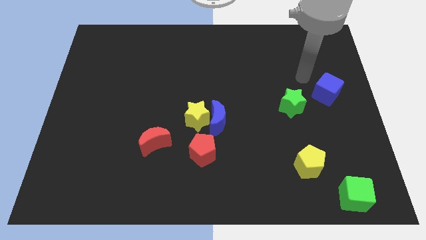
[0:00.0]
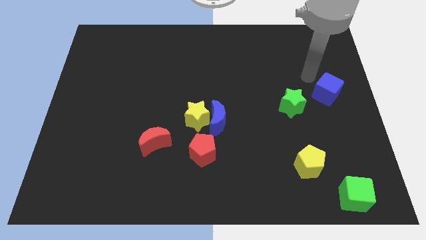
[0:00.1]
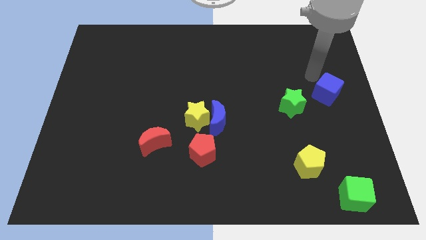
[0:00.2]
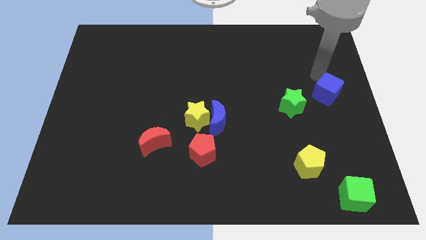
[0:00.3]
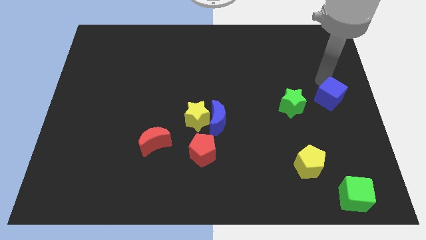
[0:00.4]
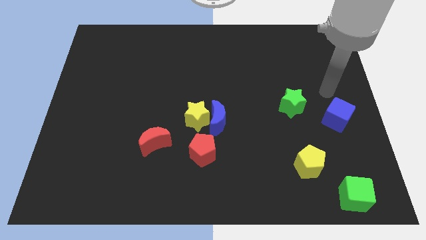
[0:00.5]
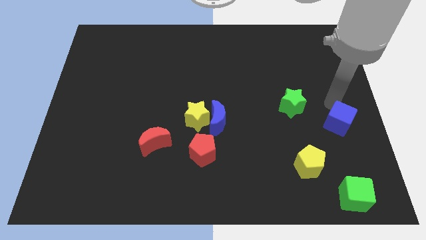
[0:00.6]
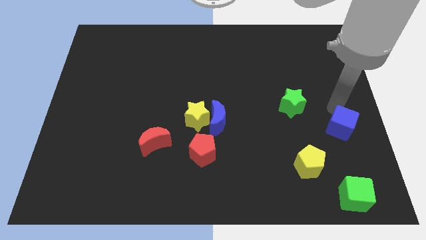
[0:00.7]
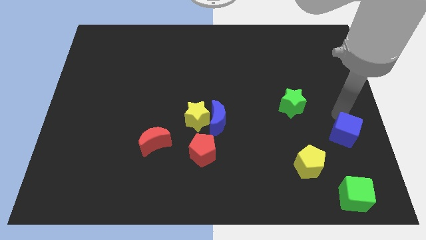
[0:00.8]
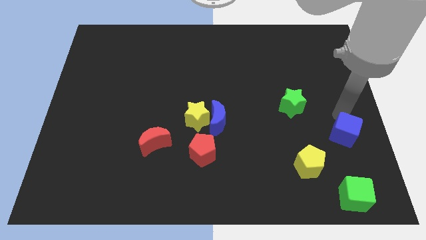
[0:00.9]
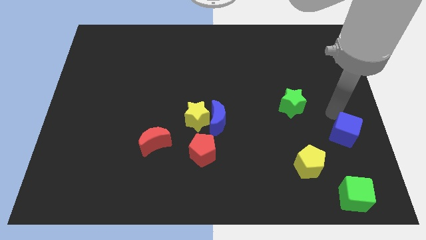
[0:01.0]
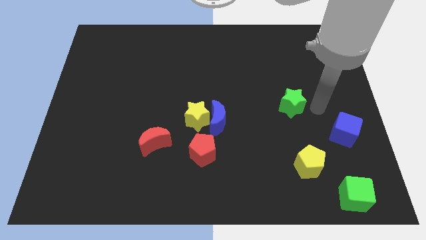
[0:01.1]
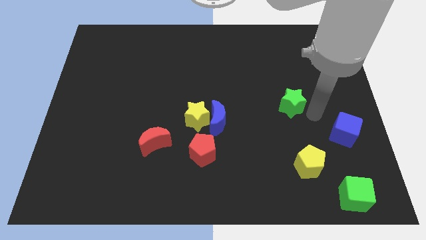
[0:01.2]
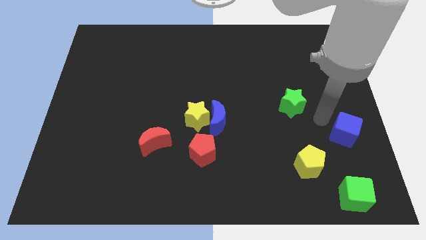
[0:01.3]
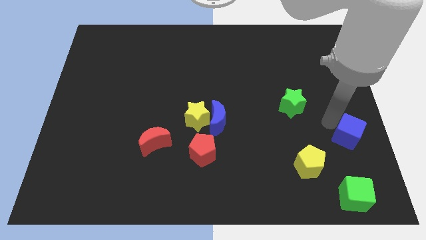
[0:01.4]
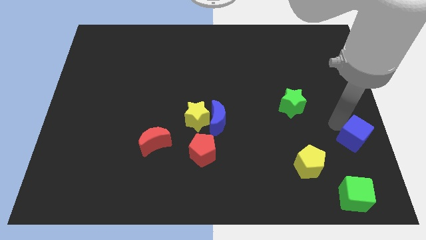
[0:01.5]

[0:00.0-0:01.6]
push the blue cube slightly down

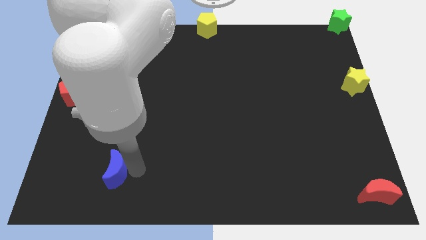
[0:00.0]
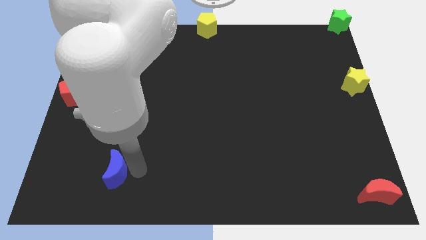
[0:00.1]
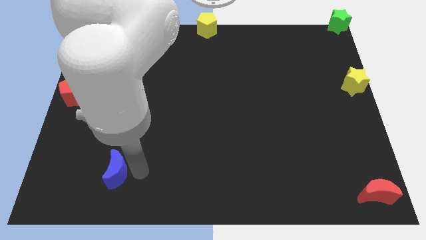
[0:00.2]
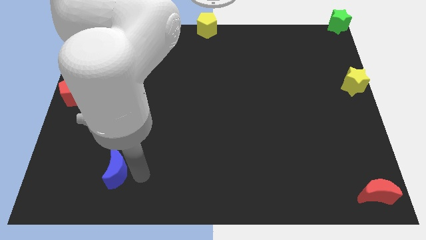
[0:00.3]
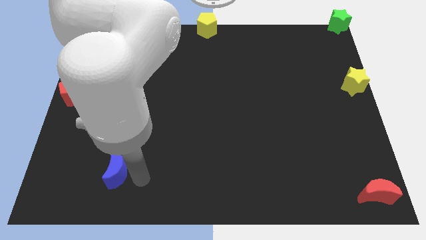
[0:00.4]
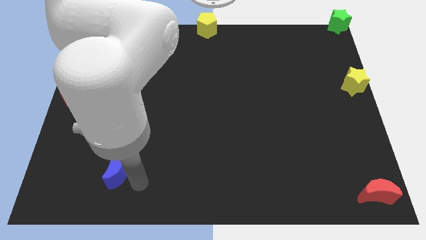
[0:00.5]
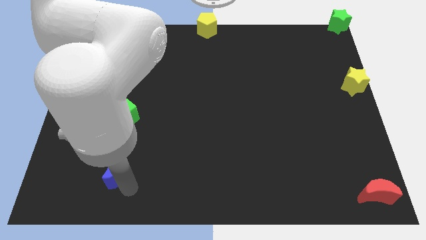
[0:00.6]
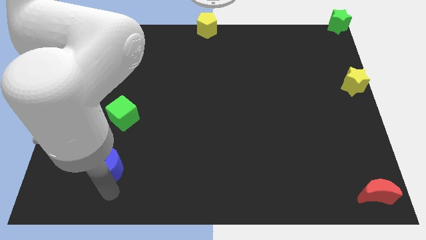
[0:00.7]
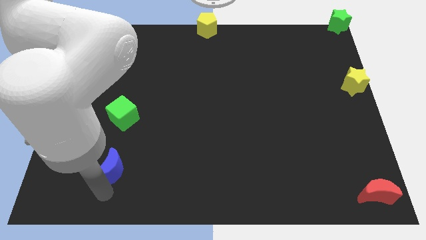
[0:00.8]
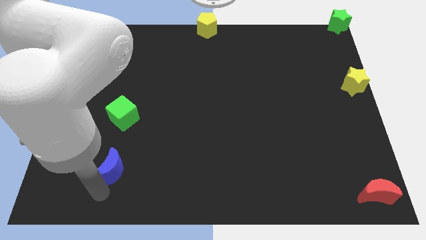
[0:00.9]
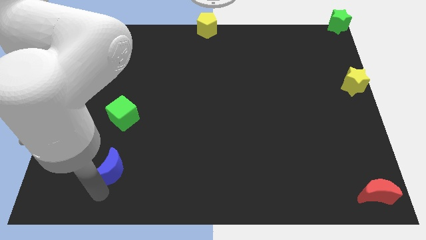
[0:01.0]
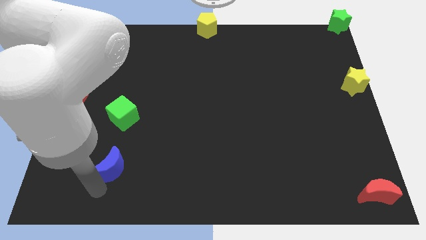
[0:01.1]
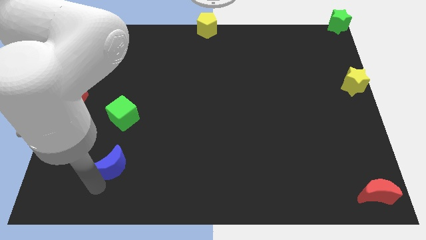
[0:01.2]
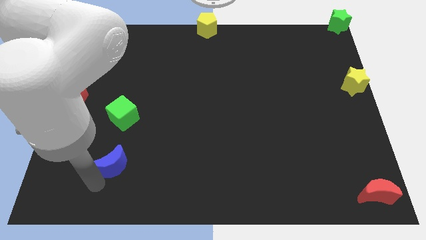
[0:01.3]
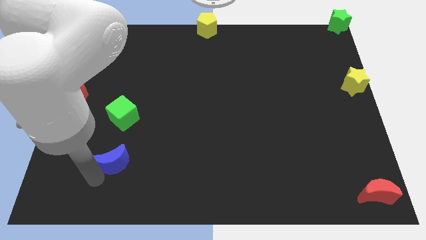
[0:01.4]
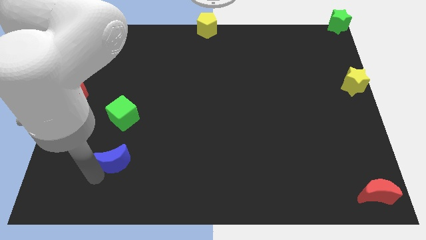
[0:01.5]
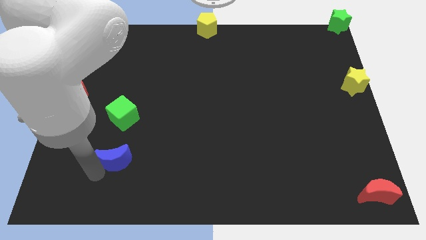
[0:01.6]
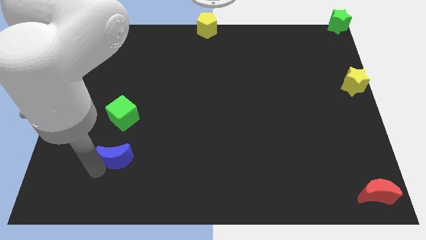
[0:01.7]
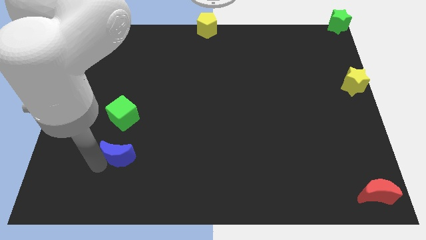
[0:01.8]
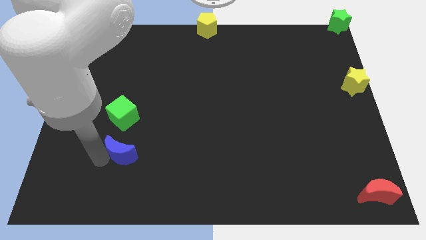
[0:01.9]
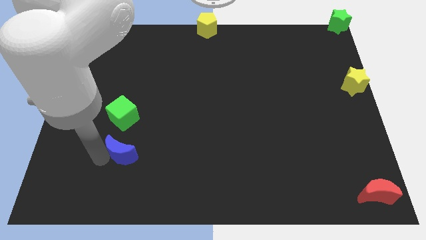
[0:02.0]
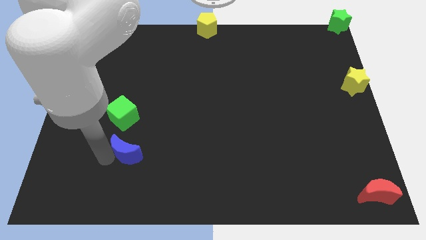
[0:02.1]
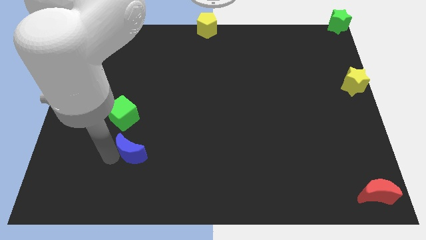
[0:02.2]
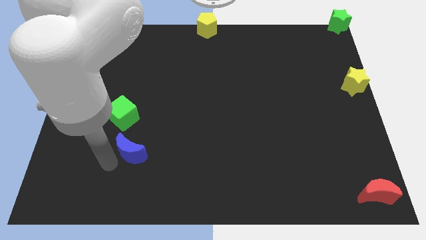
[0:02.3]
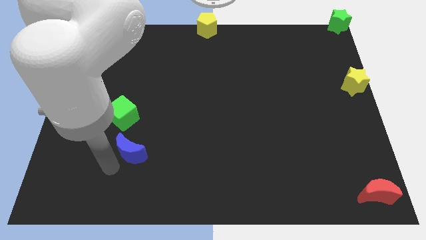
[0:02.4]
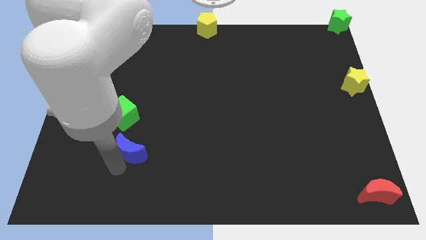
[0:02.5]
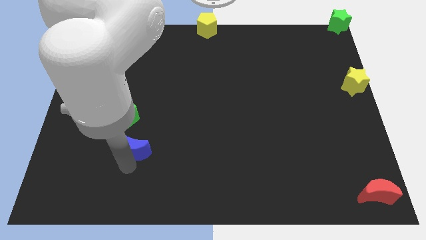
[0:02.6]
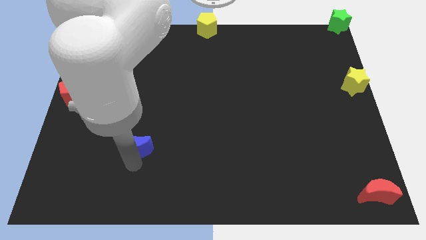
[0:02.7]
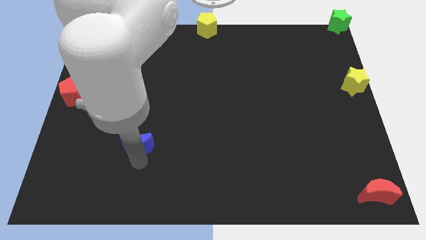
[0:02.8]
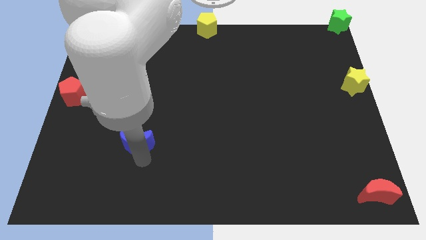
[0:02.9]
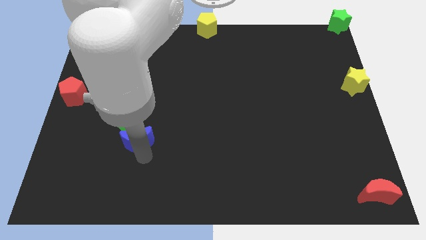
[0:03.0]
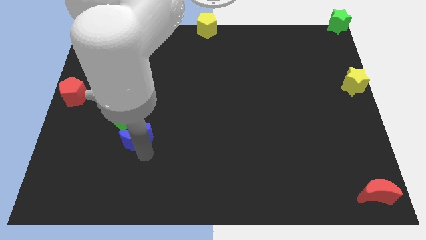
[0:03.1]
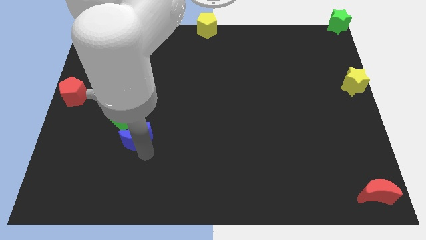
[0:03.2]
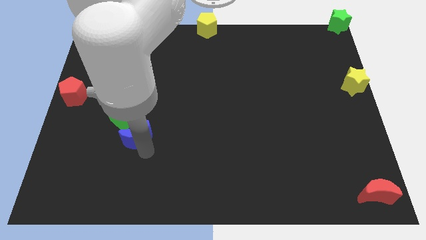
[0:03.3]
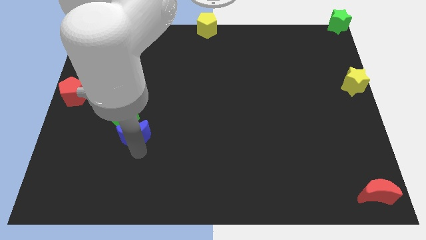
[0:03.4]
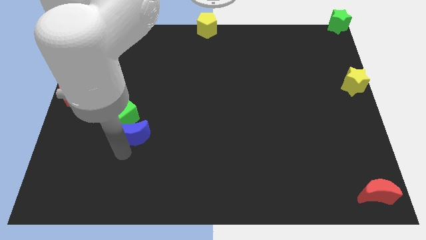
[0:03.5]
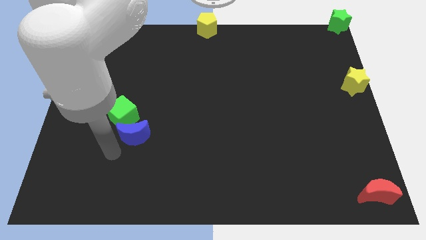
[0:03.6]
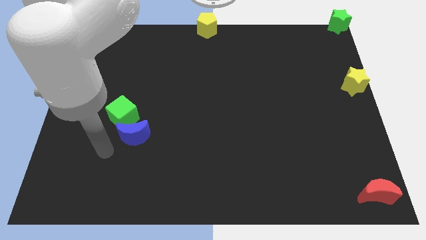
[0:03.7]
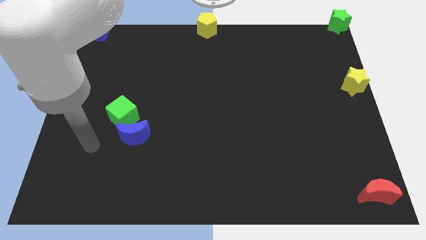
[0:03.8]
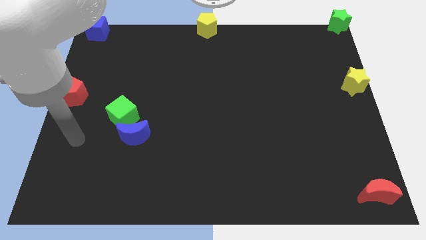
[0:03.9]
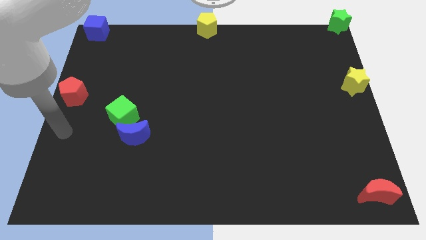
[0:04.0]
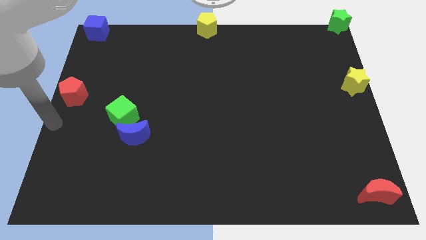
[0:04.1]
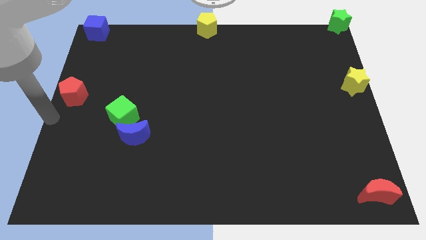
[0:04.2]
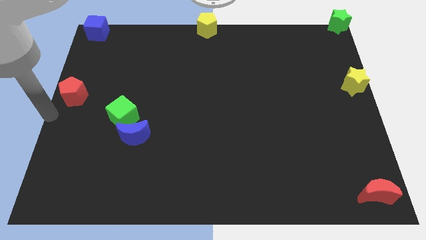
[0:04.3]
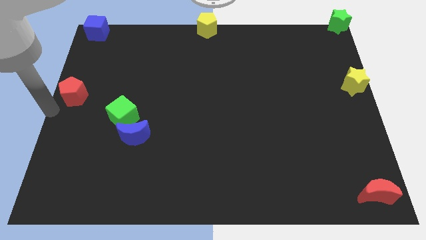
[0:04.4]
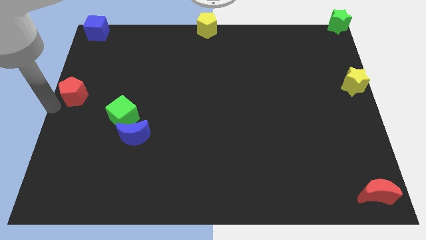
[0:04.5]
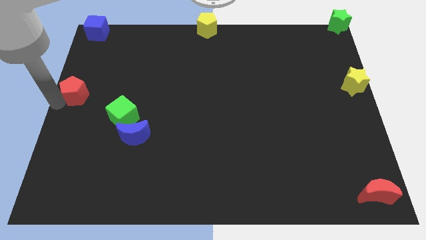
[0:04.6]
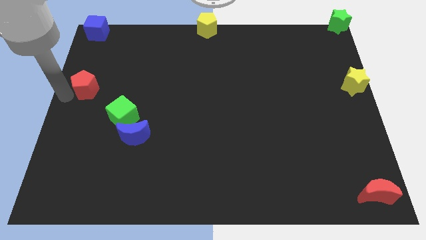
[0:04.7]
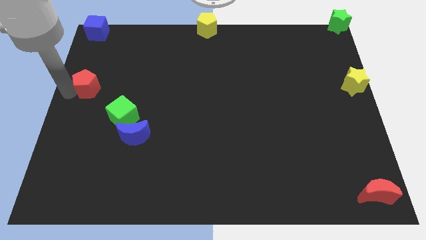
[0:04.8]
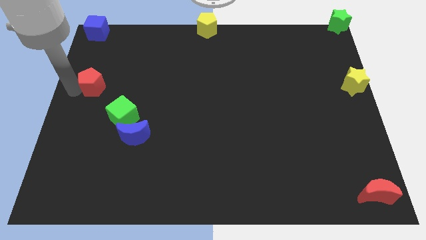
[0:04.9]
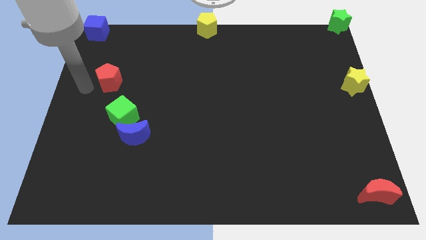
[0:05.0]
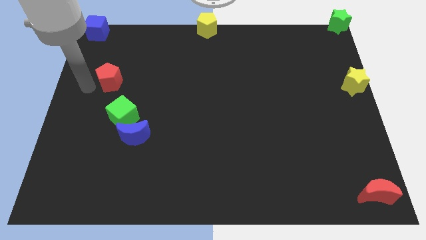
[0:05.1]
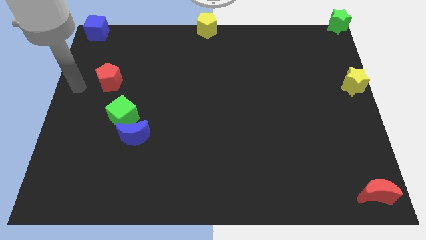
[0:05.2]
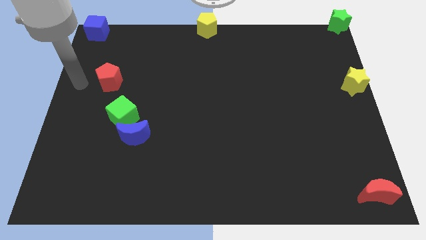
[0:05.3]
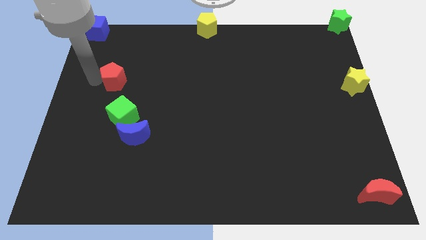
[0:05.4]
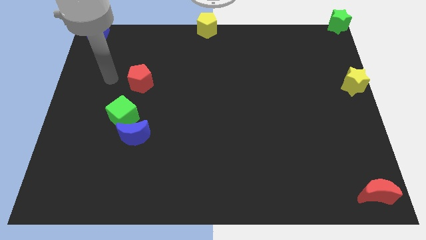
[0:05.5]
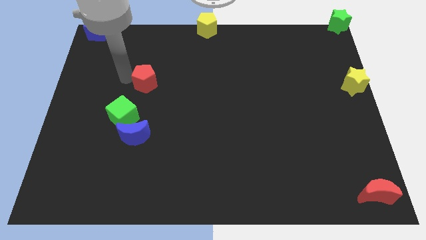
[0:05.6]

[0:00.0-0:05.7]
put the red pentagon above the green cube

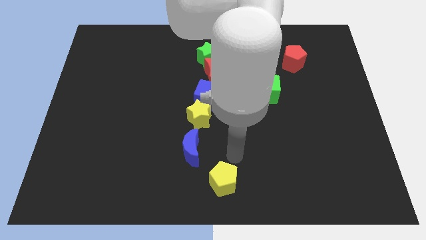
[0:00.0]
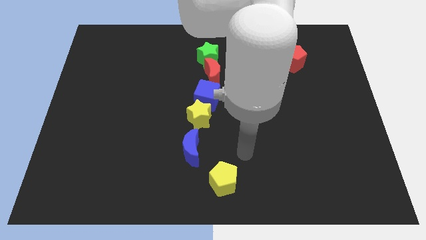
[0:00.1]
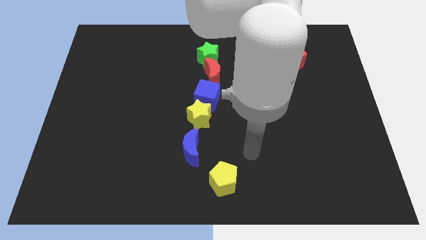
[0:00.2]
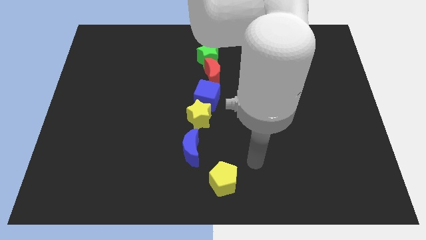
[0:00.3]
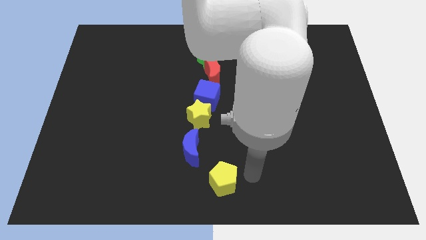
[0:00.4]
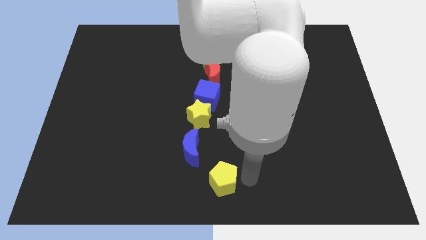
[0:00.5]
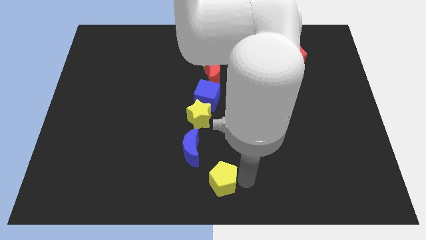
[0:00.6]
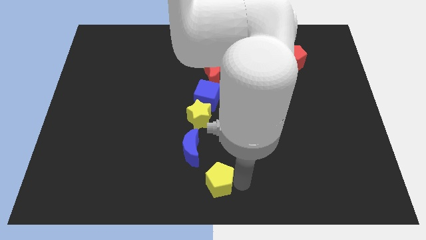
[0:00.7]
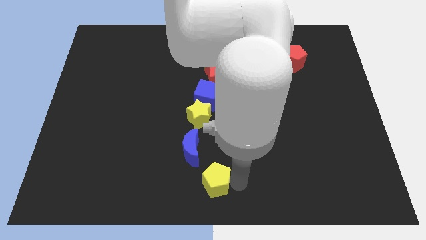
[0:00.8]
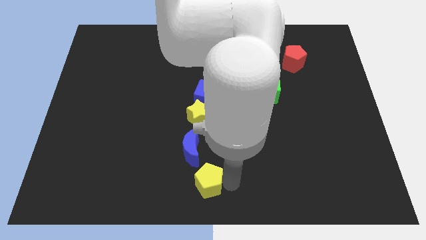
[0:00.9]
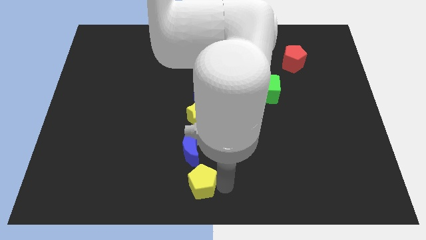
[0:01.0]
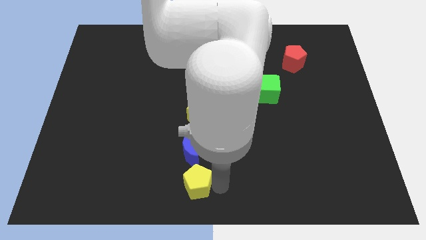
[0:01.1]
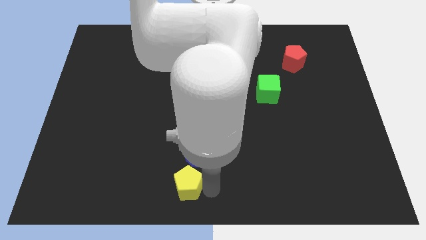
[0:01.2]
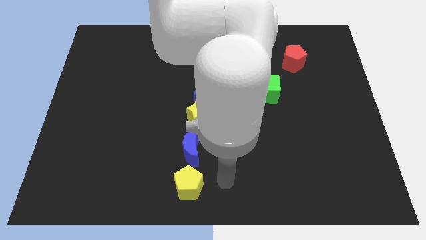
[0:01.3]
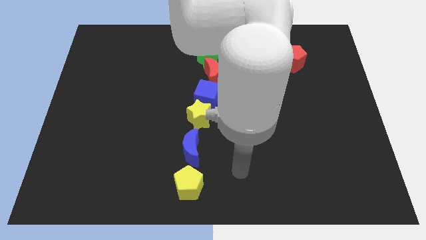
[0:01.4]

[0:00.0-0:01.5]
place the yellow pentagon below the blue moon

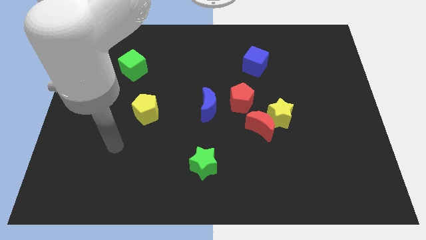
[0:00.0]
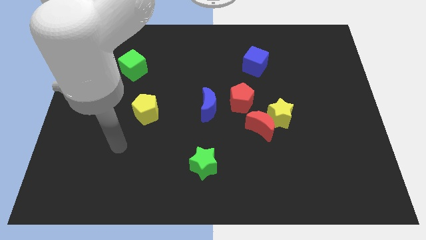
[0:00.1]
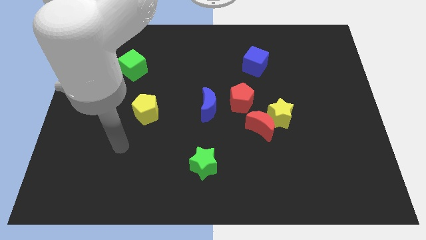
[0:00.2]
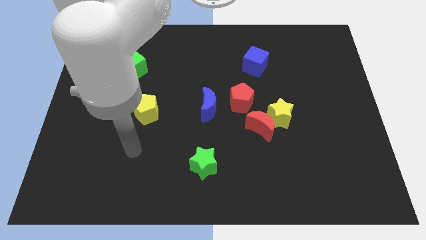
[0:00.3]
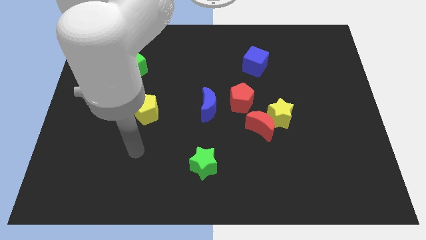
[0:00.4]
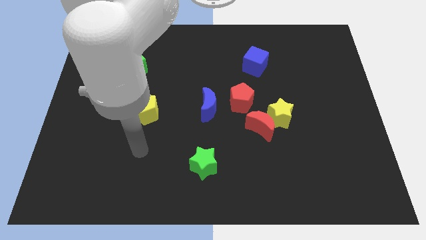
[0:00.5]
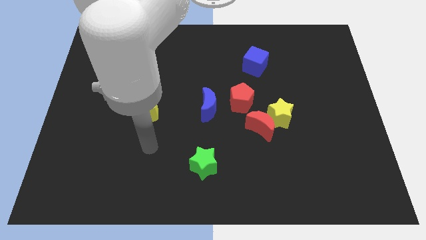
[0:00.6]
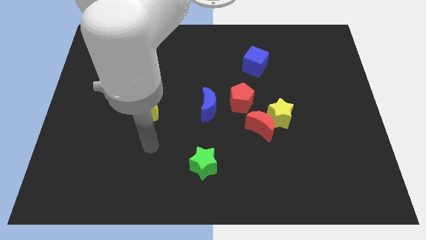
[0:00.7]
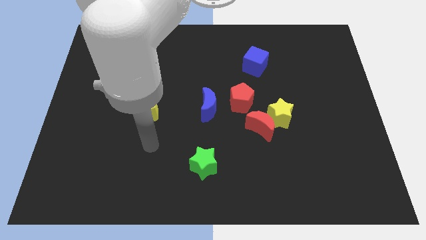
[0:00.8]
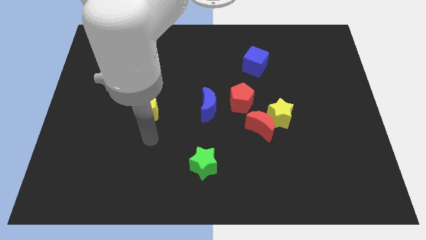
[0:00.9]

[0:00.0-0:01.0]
move the arm towards the yellow pentagon
